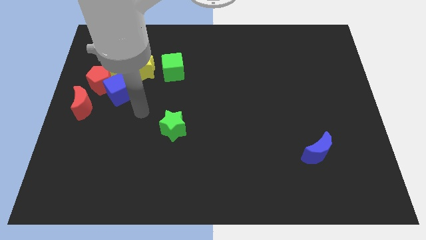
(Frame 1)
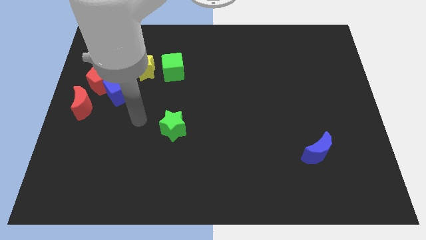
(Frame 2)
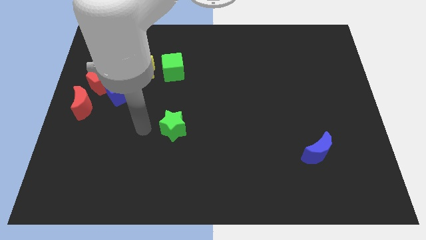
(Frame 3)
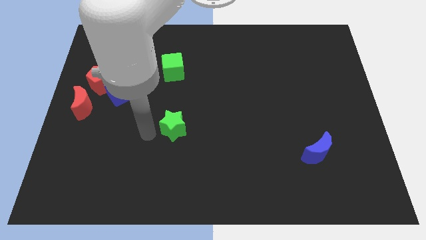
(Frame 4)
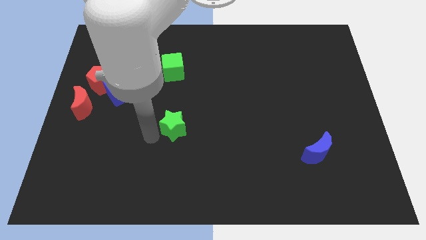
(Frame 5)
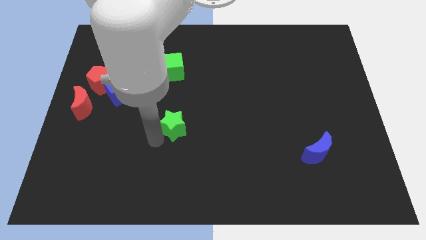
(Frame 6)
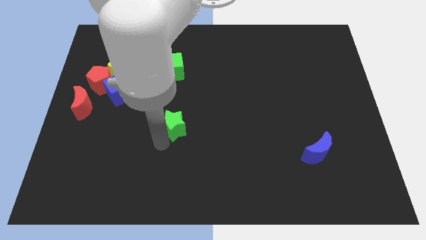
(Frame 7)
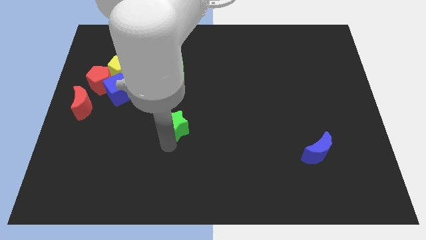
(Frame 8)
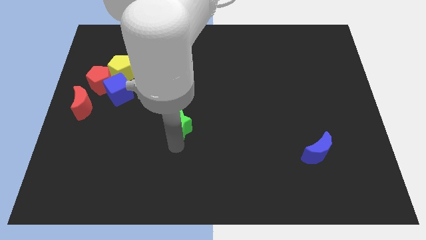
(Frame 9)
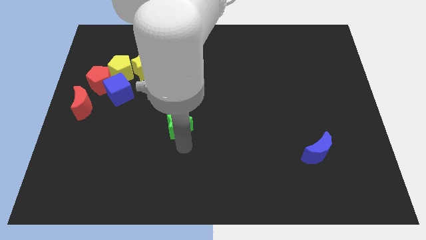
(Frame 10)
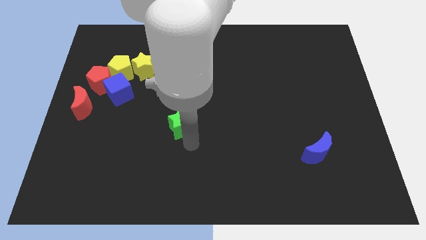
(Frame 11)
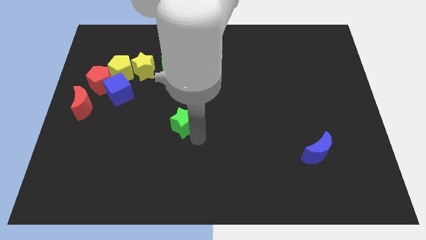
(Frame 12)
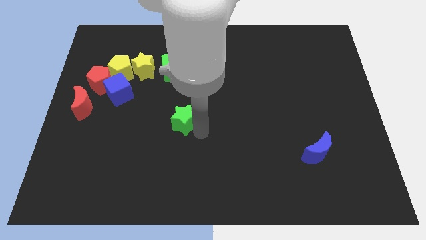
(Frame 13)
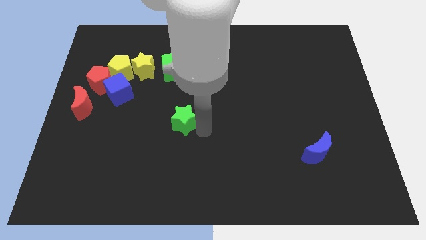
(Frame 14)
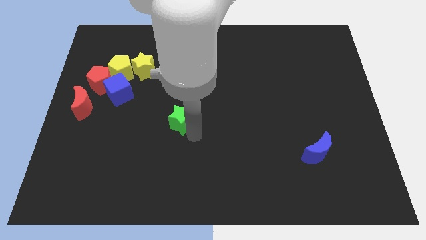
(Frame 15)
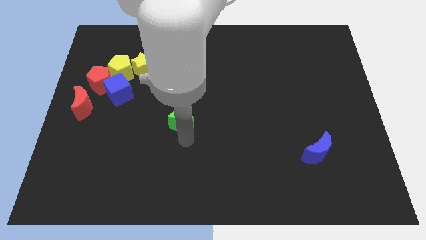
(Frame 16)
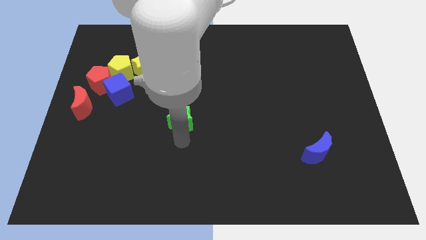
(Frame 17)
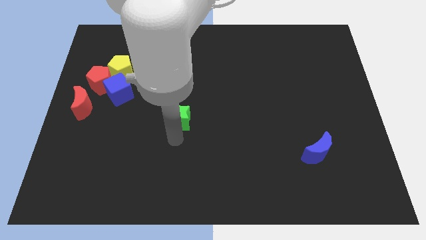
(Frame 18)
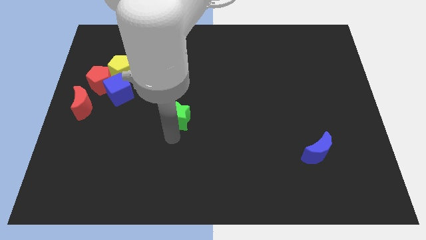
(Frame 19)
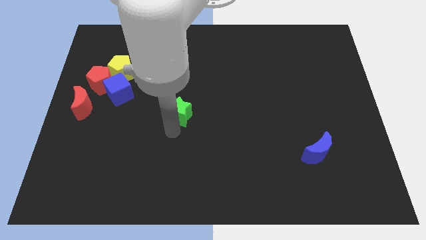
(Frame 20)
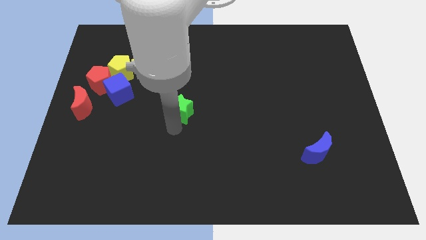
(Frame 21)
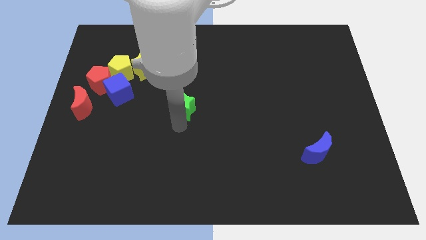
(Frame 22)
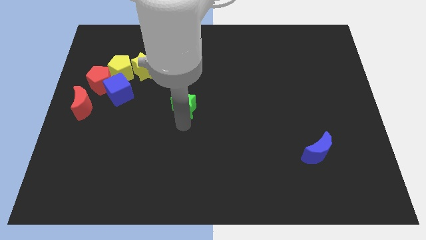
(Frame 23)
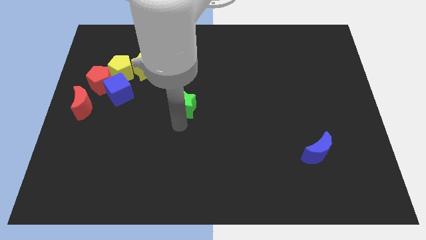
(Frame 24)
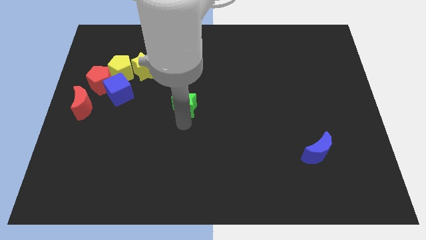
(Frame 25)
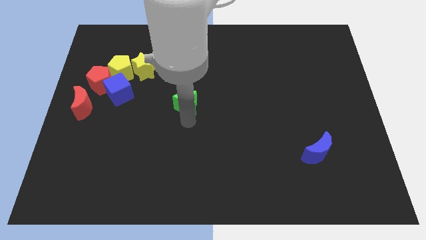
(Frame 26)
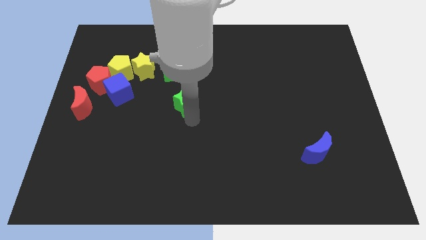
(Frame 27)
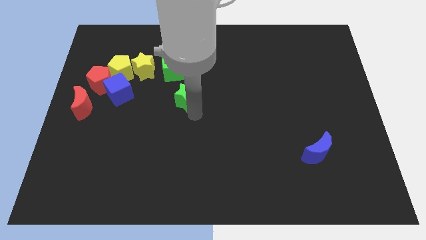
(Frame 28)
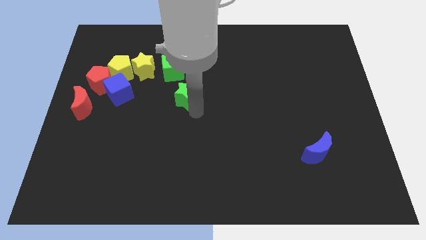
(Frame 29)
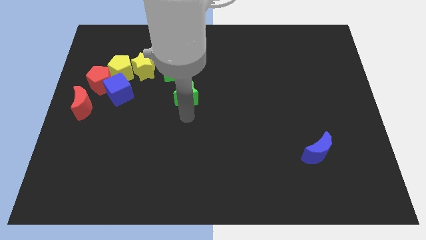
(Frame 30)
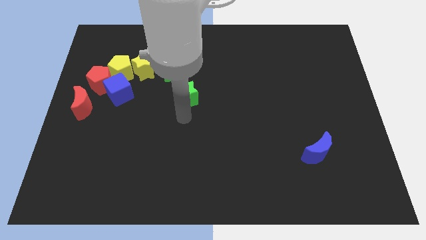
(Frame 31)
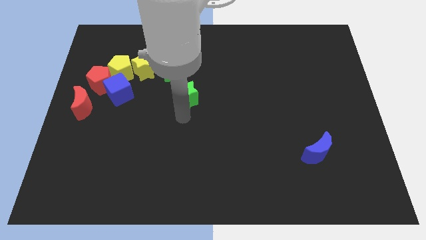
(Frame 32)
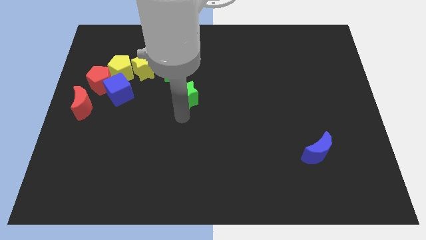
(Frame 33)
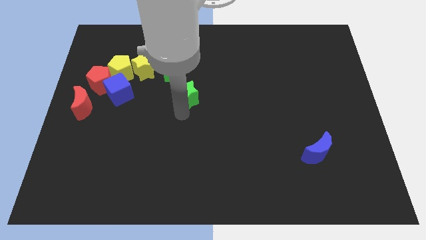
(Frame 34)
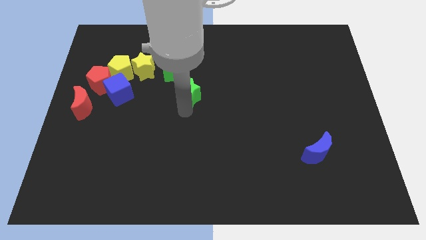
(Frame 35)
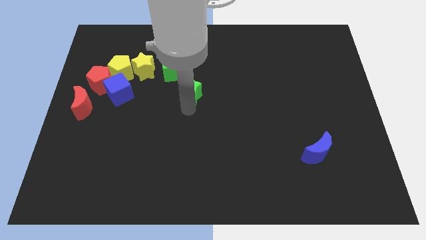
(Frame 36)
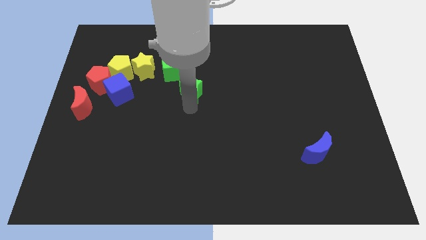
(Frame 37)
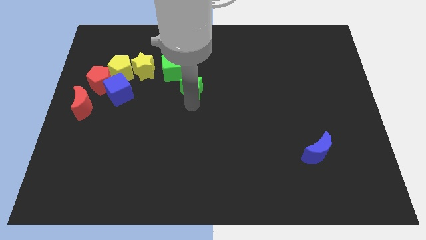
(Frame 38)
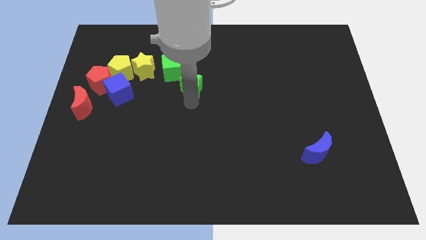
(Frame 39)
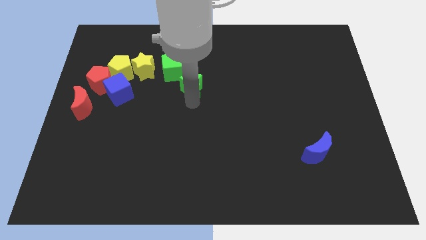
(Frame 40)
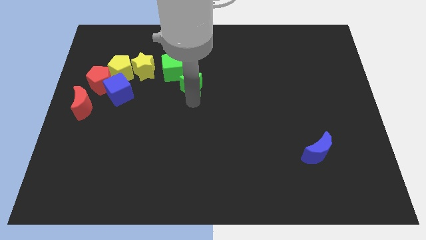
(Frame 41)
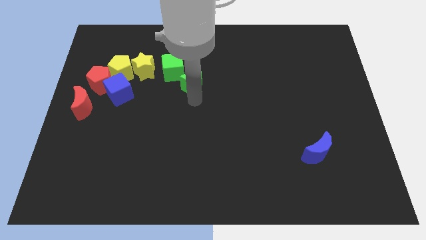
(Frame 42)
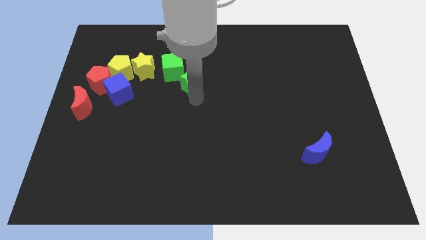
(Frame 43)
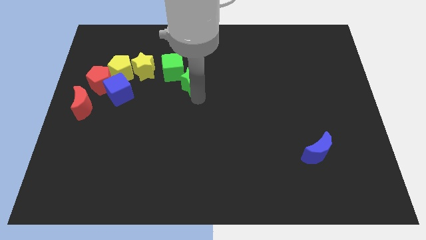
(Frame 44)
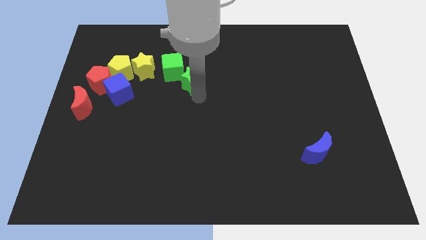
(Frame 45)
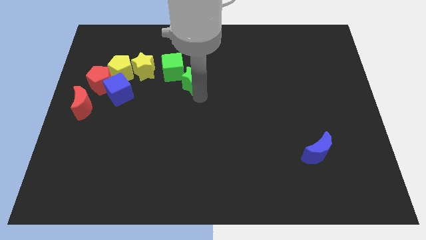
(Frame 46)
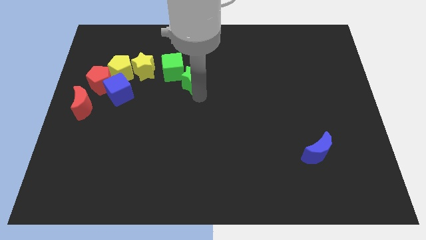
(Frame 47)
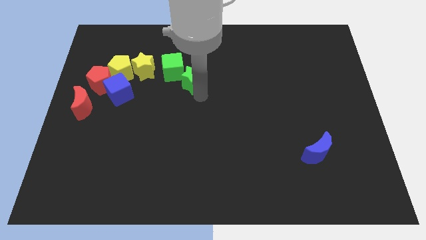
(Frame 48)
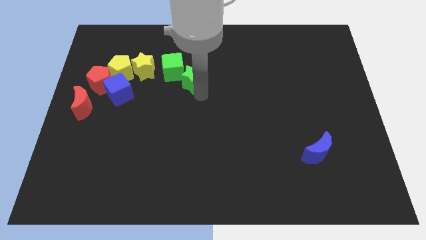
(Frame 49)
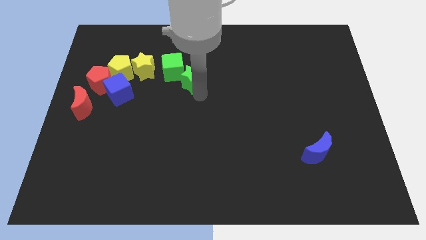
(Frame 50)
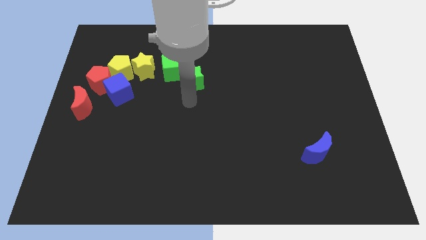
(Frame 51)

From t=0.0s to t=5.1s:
push the green star to the bottom right of the green cube

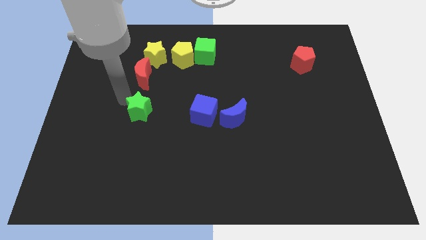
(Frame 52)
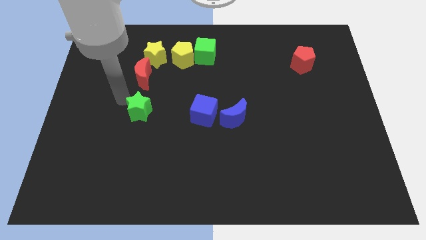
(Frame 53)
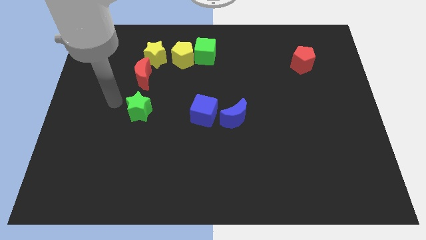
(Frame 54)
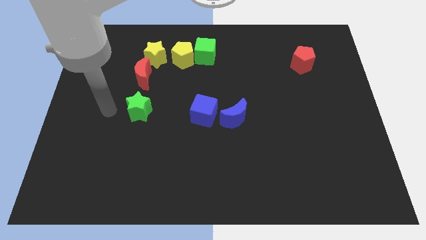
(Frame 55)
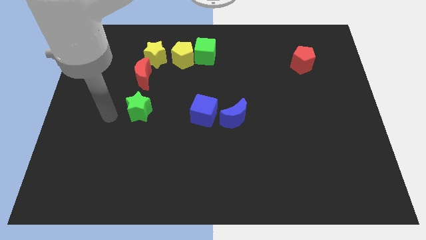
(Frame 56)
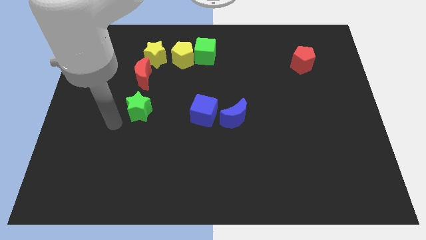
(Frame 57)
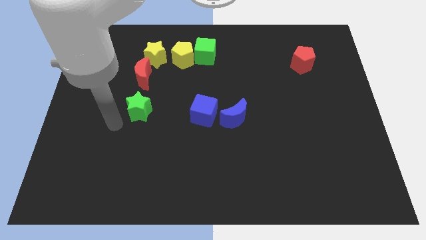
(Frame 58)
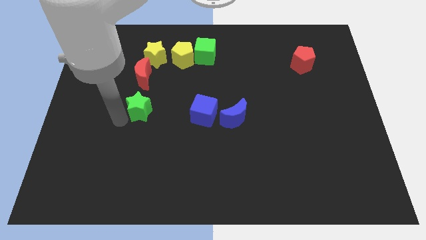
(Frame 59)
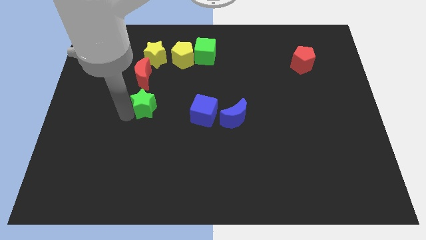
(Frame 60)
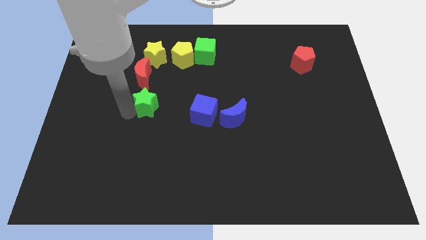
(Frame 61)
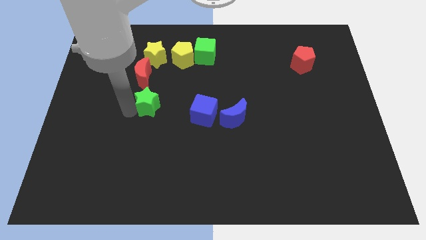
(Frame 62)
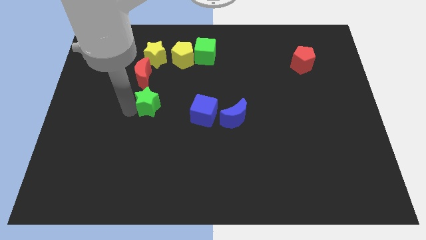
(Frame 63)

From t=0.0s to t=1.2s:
place green star below red crescent

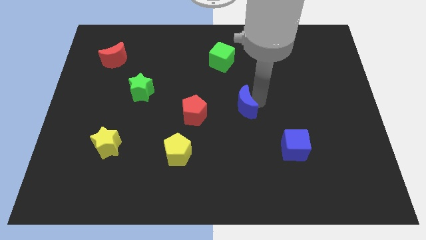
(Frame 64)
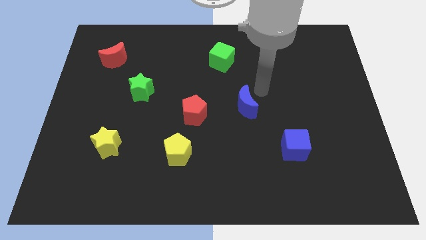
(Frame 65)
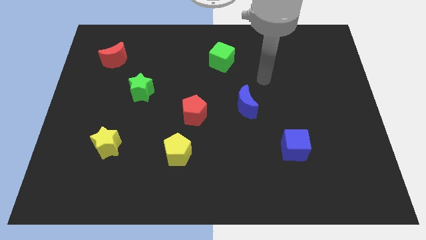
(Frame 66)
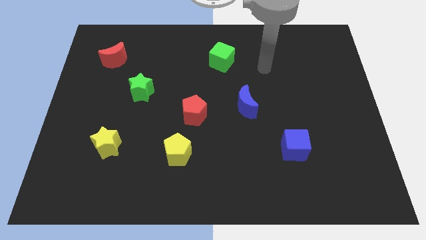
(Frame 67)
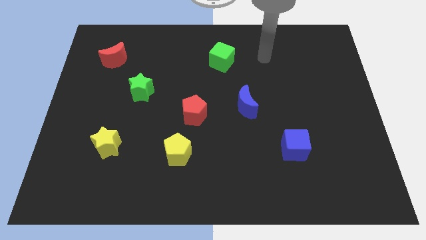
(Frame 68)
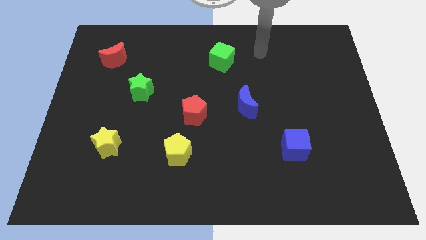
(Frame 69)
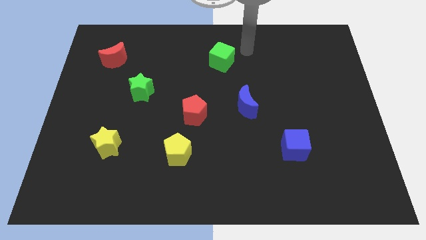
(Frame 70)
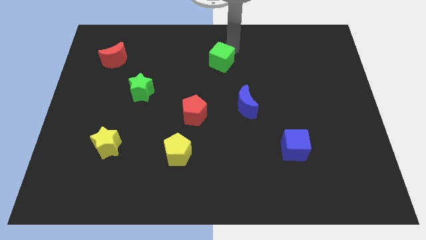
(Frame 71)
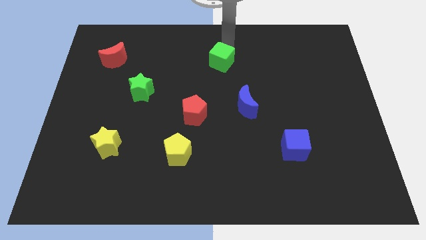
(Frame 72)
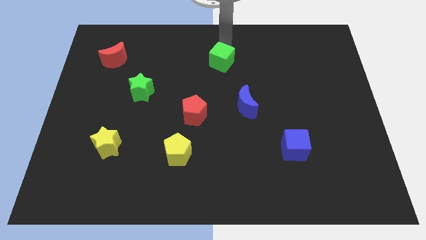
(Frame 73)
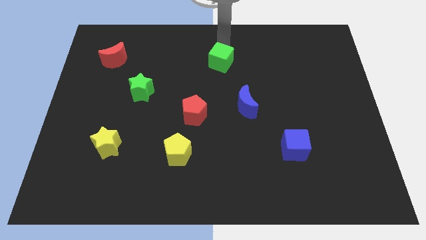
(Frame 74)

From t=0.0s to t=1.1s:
move your arm to the top of the green cube

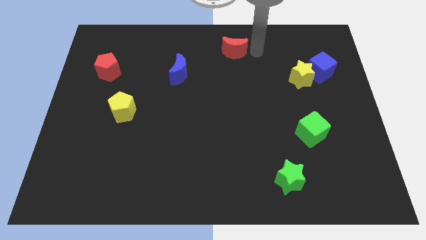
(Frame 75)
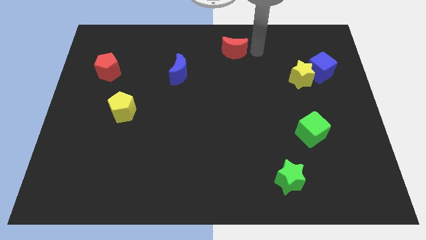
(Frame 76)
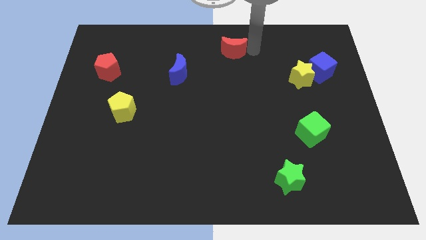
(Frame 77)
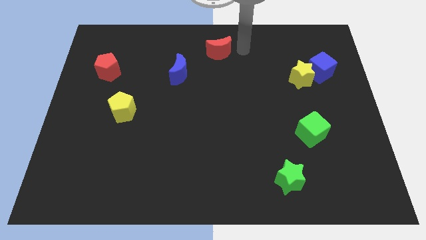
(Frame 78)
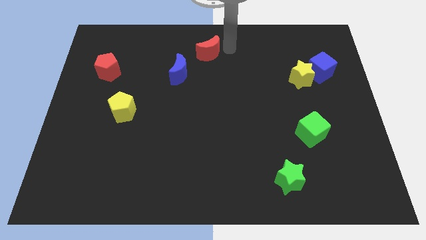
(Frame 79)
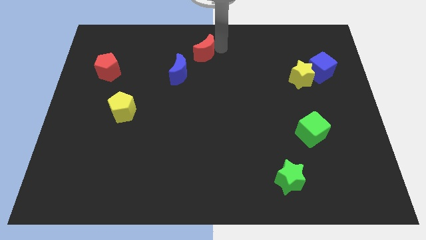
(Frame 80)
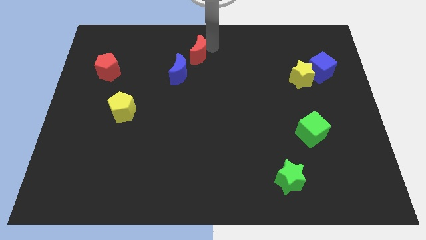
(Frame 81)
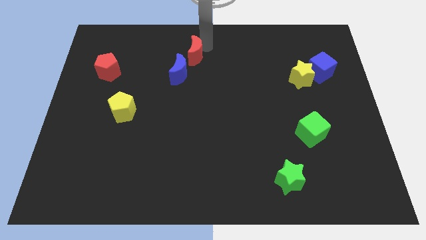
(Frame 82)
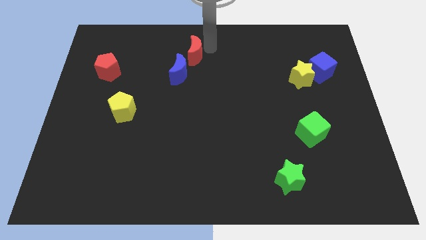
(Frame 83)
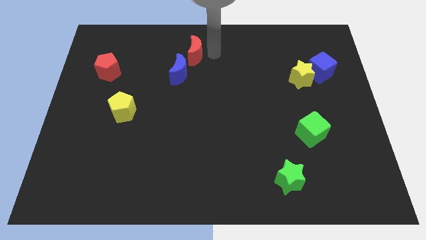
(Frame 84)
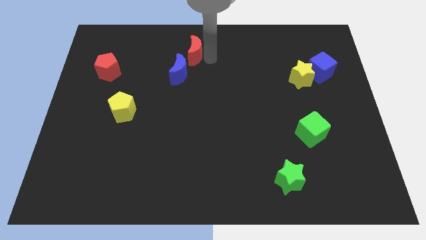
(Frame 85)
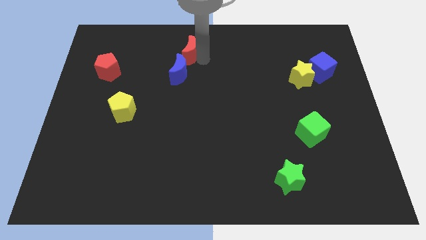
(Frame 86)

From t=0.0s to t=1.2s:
move the red moon to the top right of the blue moon

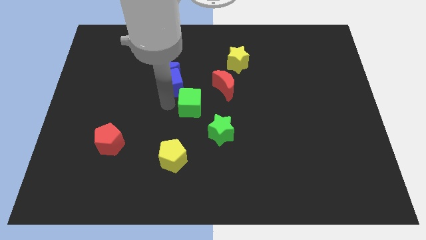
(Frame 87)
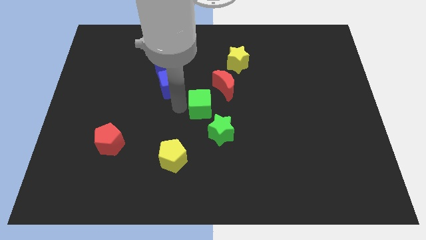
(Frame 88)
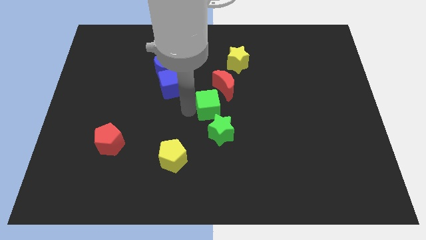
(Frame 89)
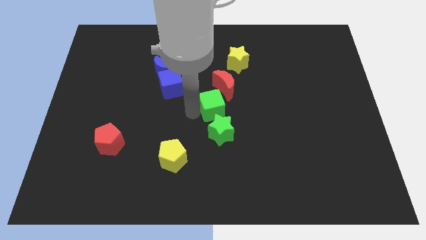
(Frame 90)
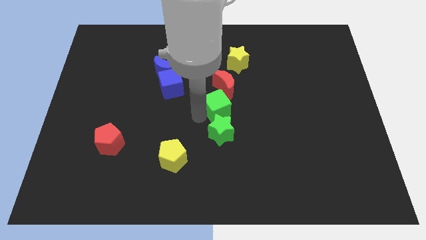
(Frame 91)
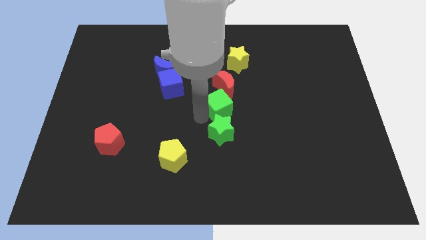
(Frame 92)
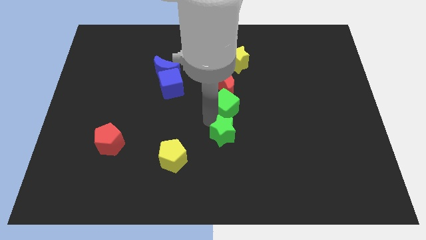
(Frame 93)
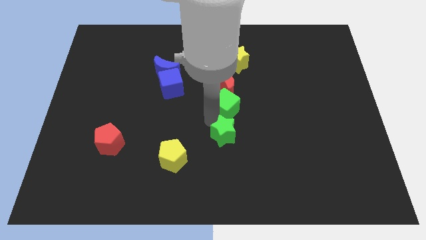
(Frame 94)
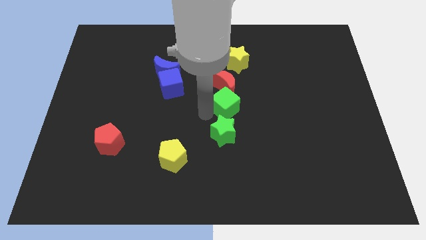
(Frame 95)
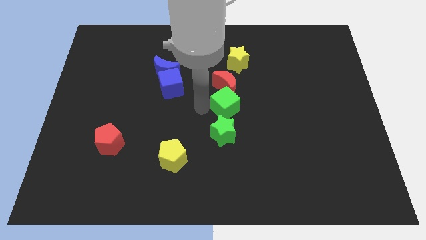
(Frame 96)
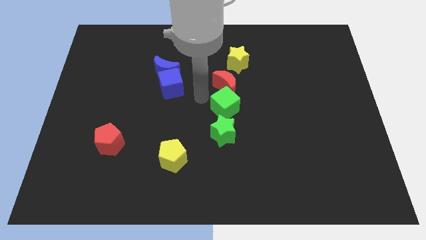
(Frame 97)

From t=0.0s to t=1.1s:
push the green cube in between the red crescent and the green star to form a vertical line
